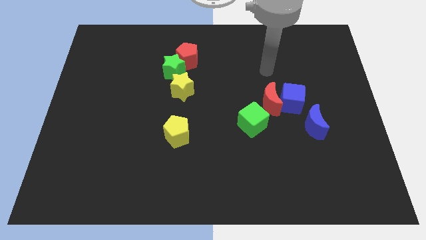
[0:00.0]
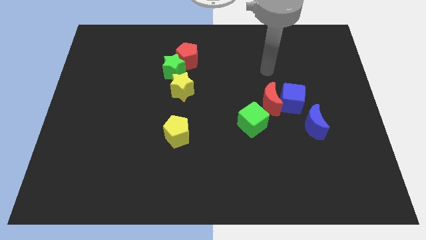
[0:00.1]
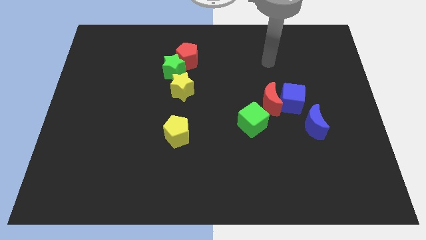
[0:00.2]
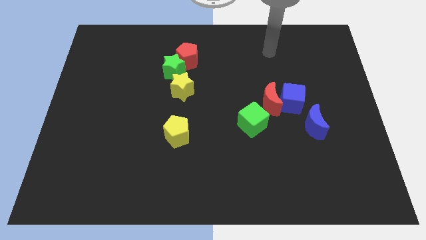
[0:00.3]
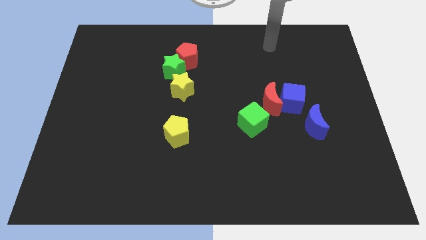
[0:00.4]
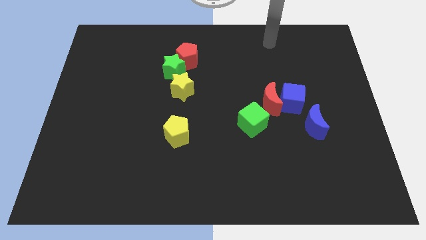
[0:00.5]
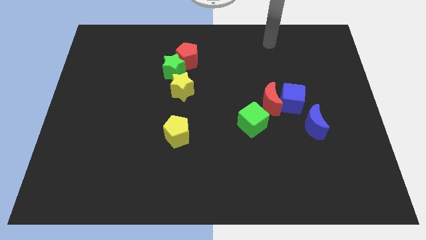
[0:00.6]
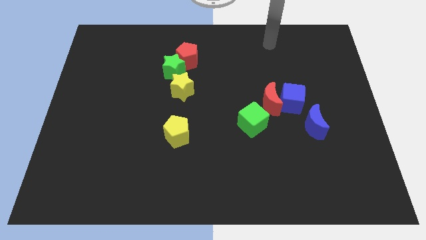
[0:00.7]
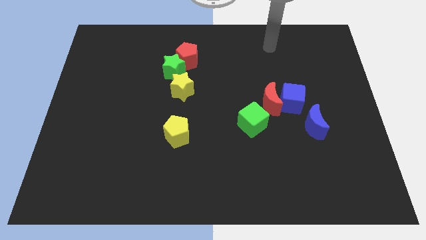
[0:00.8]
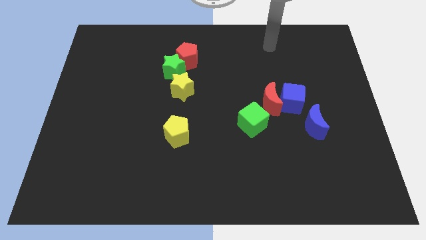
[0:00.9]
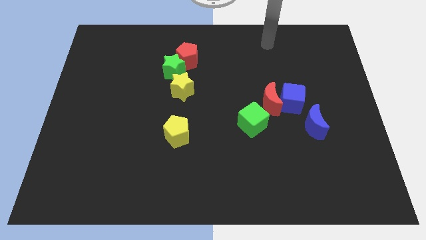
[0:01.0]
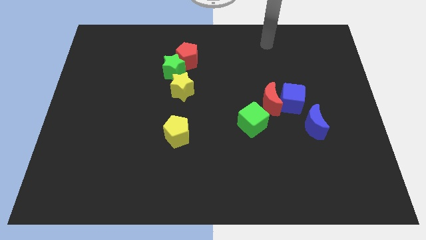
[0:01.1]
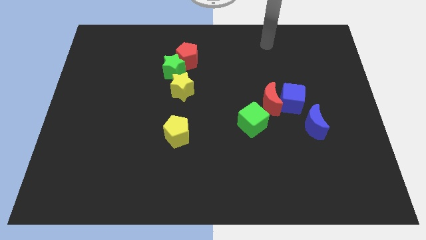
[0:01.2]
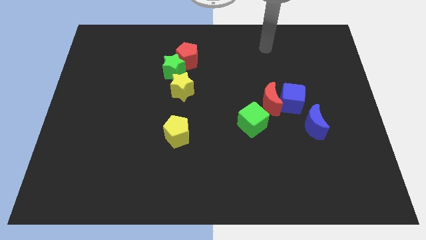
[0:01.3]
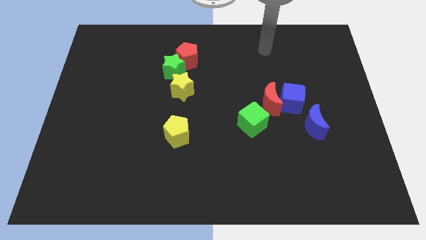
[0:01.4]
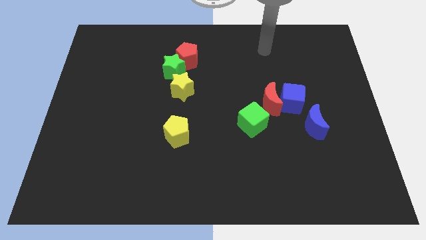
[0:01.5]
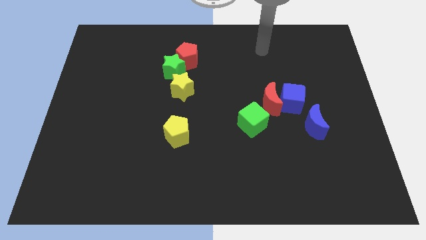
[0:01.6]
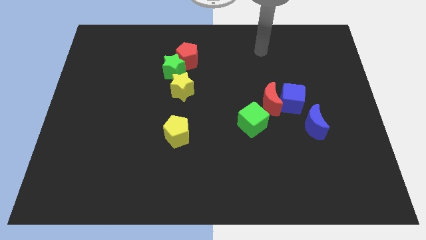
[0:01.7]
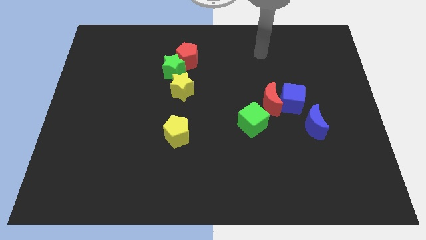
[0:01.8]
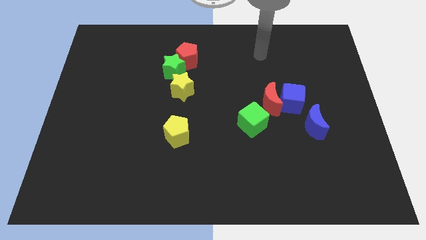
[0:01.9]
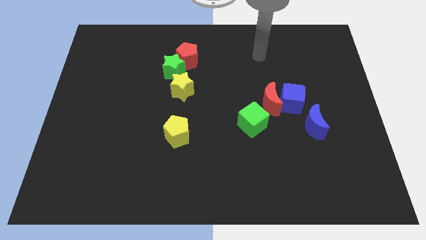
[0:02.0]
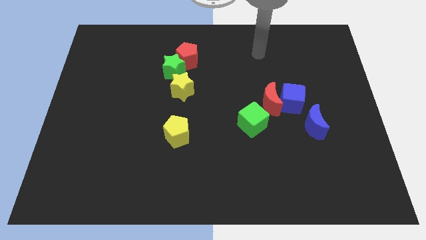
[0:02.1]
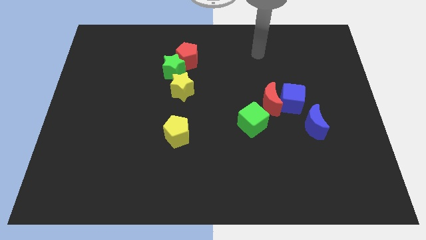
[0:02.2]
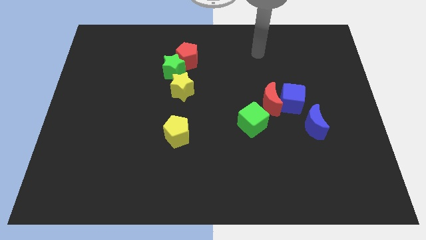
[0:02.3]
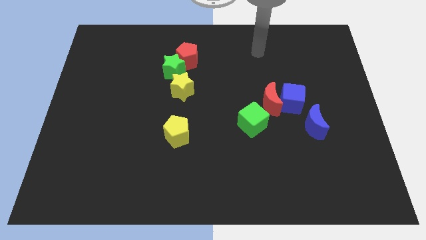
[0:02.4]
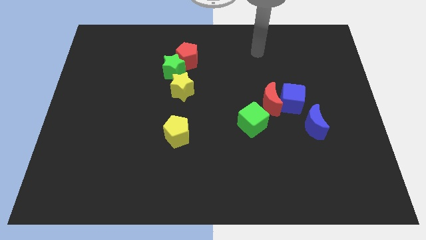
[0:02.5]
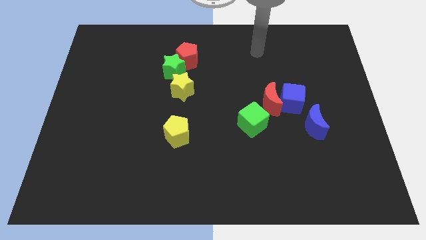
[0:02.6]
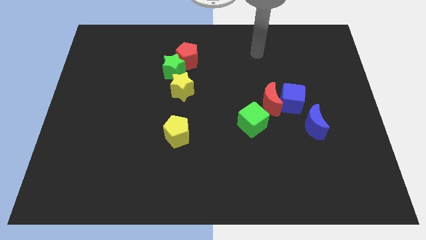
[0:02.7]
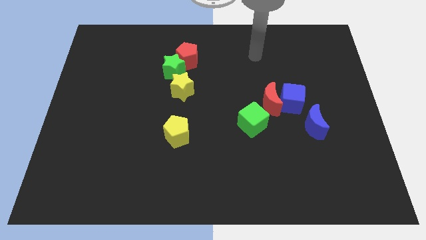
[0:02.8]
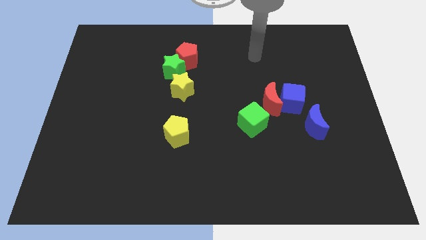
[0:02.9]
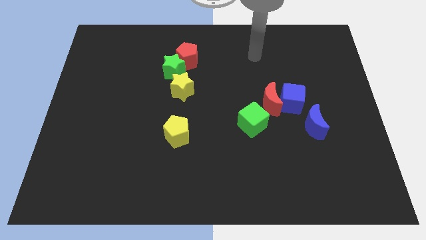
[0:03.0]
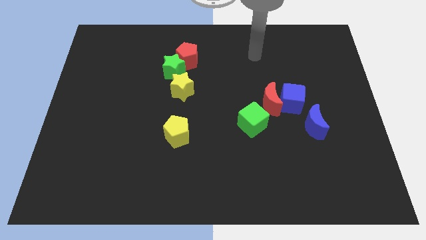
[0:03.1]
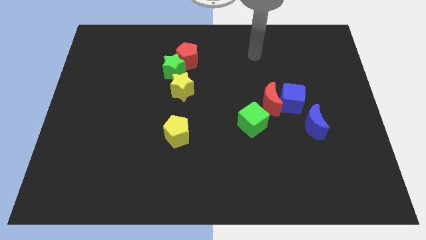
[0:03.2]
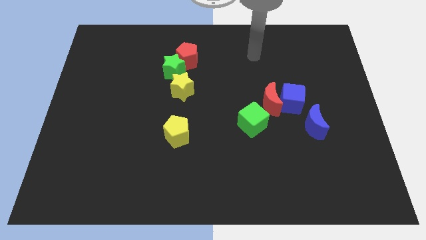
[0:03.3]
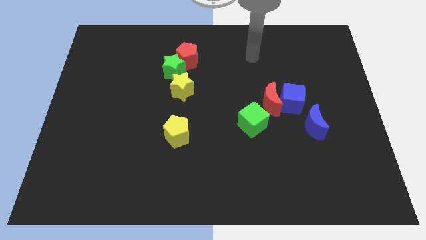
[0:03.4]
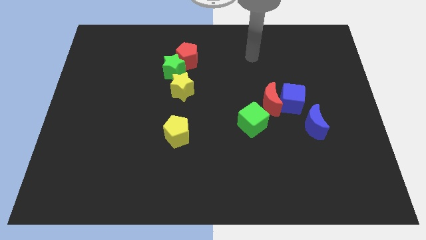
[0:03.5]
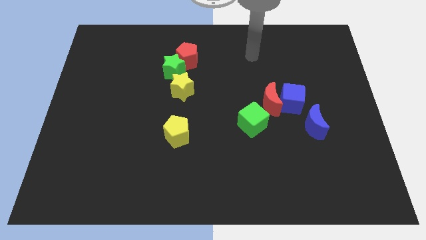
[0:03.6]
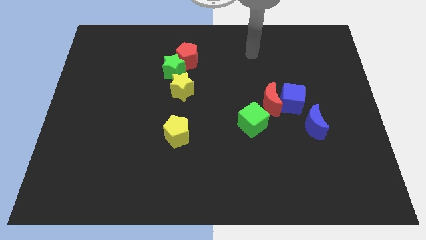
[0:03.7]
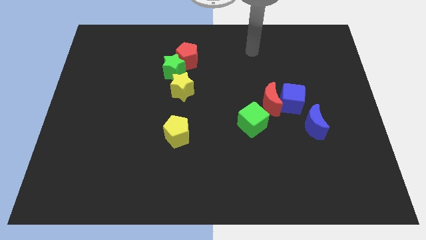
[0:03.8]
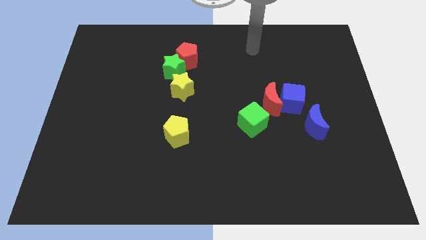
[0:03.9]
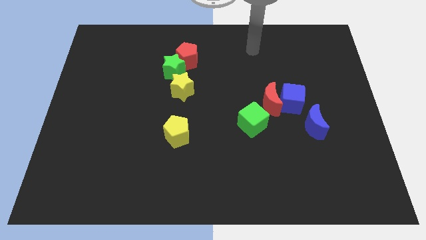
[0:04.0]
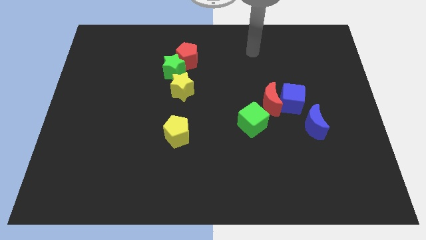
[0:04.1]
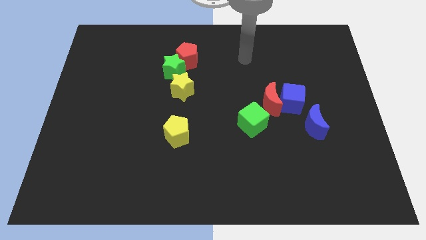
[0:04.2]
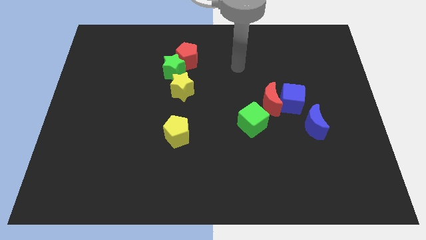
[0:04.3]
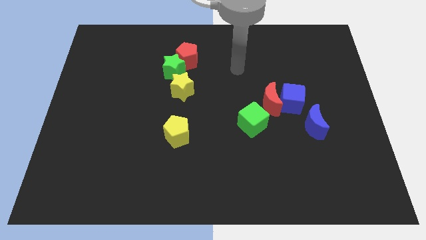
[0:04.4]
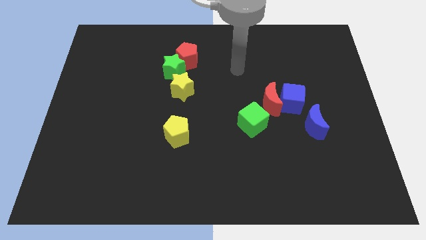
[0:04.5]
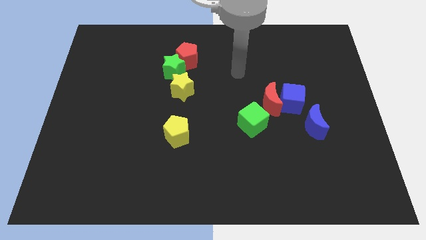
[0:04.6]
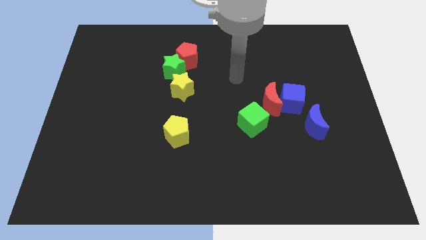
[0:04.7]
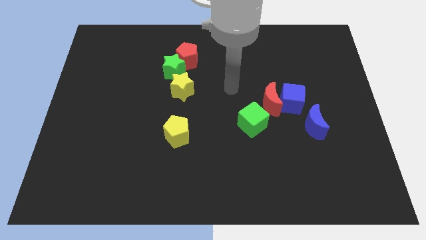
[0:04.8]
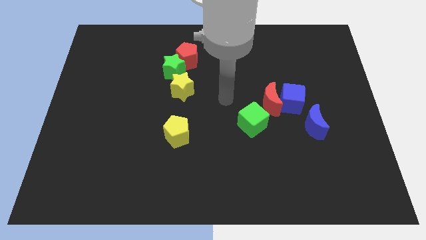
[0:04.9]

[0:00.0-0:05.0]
place your arm at the center of the board

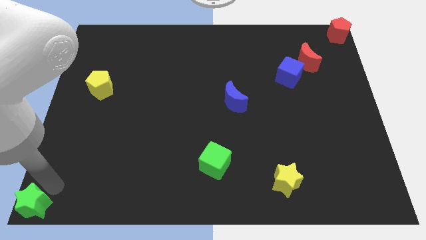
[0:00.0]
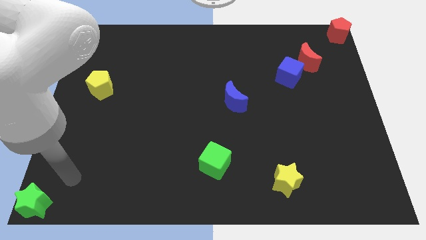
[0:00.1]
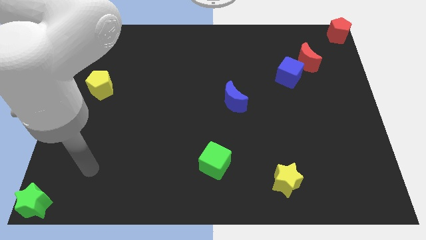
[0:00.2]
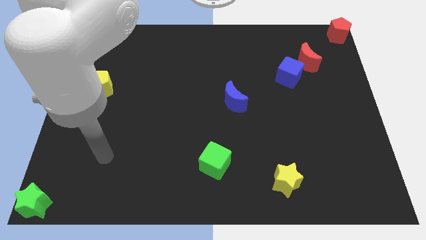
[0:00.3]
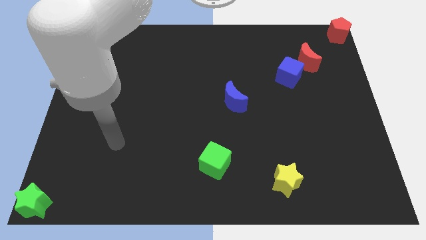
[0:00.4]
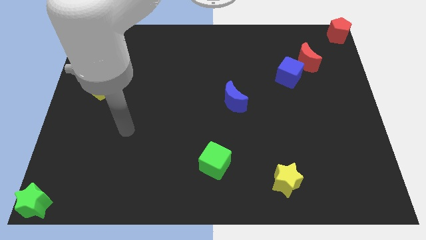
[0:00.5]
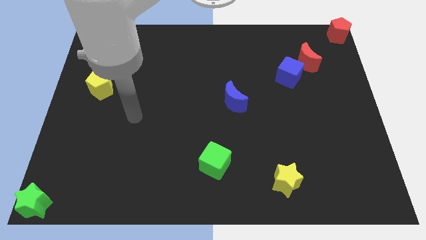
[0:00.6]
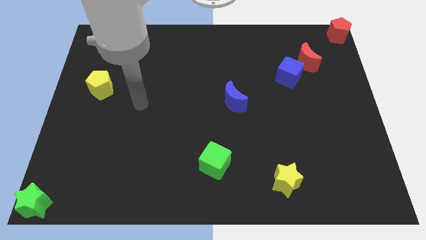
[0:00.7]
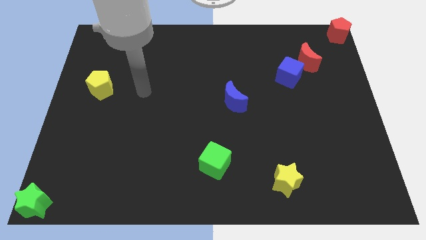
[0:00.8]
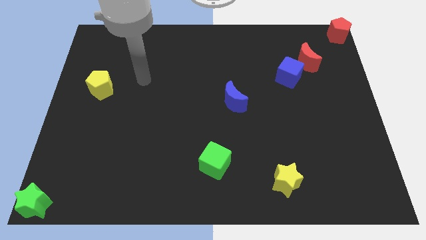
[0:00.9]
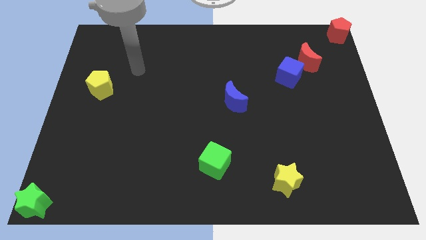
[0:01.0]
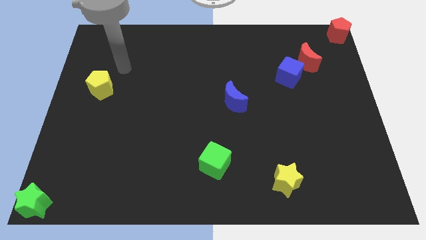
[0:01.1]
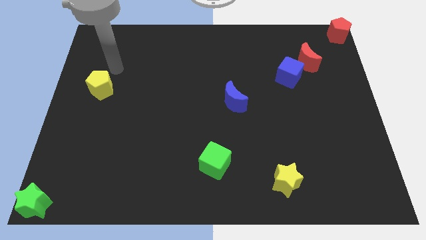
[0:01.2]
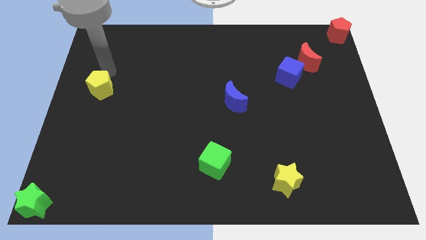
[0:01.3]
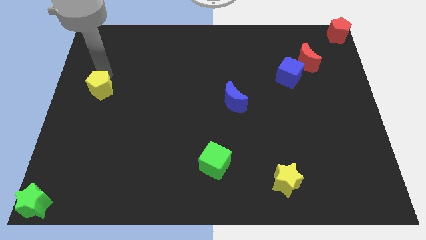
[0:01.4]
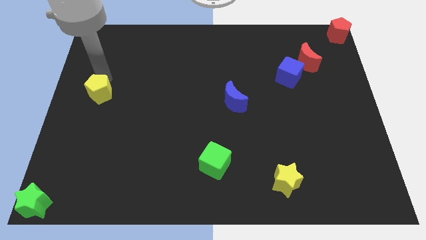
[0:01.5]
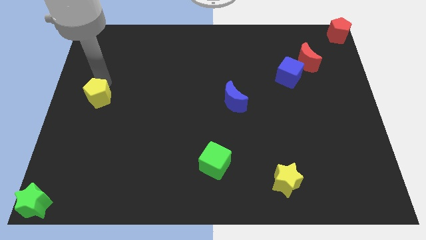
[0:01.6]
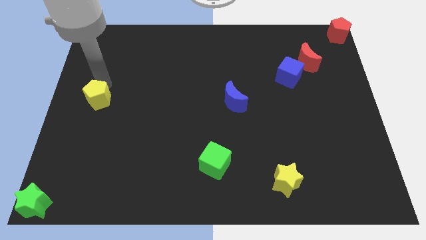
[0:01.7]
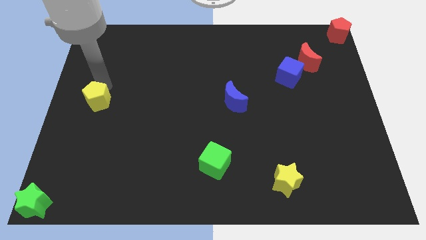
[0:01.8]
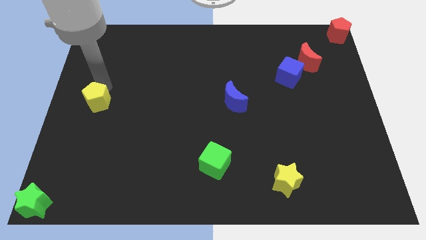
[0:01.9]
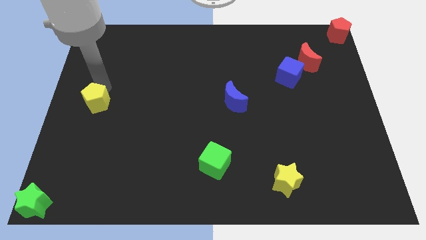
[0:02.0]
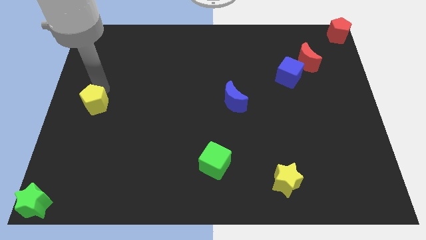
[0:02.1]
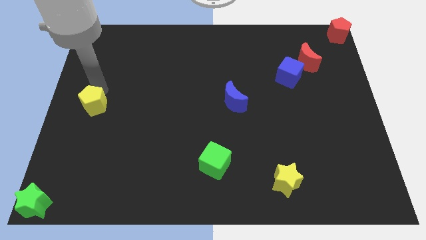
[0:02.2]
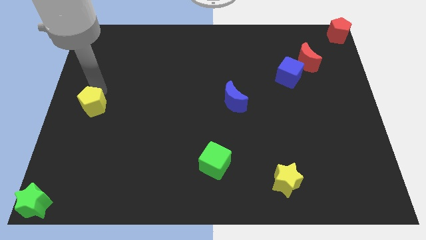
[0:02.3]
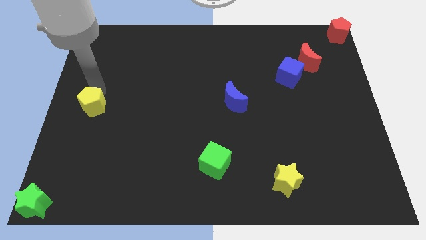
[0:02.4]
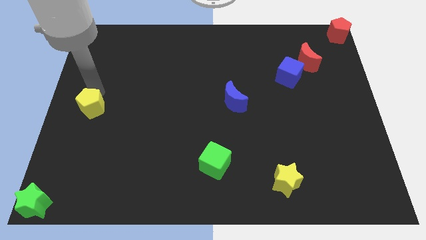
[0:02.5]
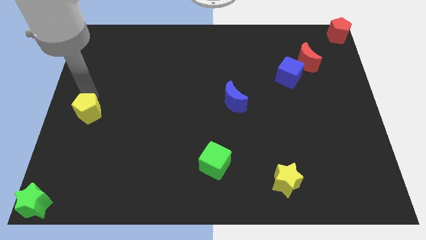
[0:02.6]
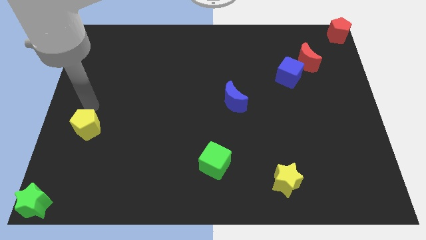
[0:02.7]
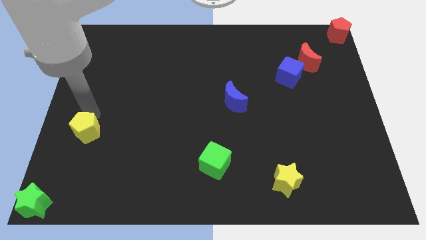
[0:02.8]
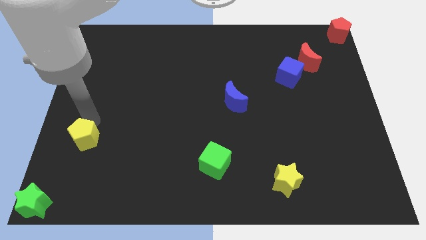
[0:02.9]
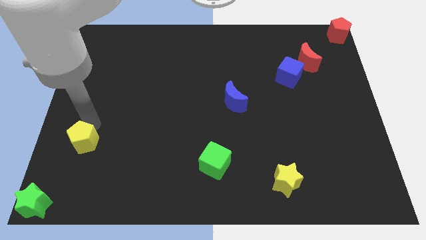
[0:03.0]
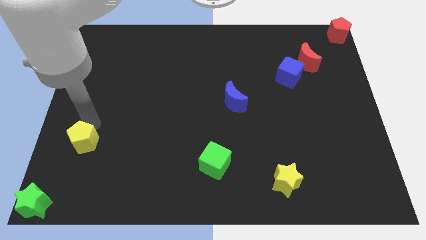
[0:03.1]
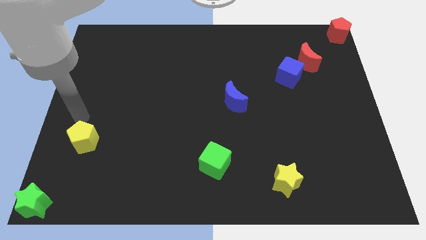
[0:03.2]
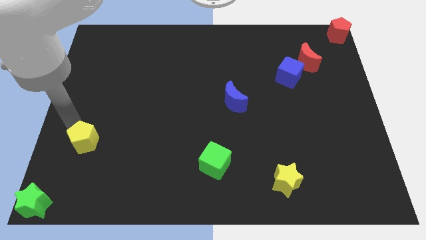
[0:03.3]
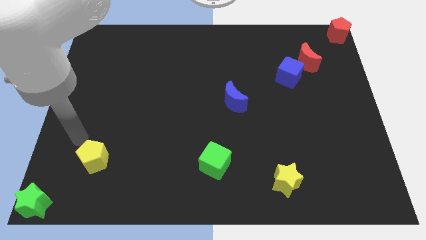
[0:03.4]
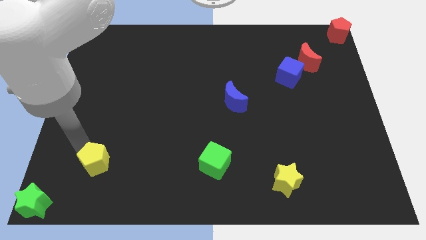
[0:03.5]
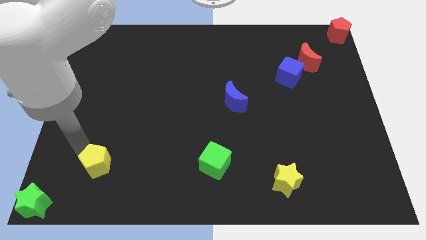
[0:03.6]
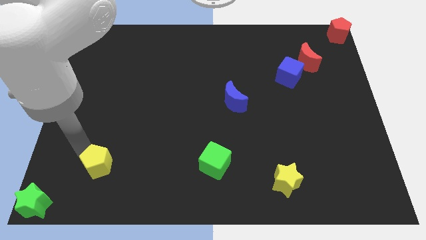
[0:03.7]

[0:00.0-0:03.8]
move the yellow pentagon to the left of the green cube

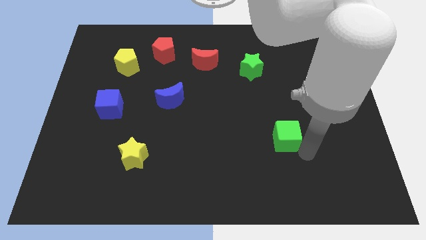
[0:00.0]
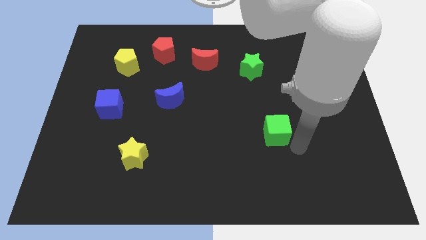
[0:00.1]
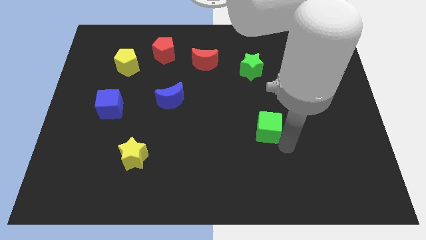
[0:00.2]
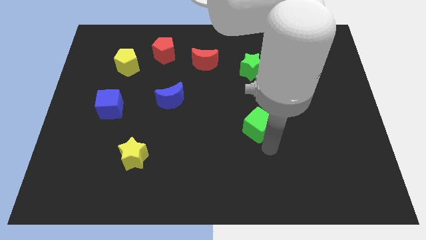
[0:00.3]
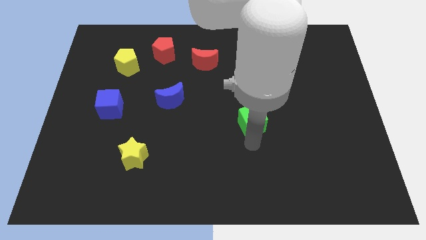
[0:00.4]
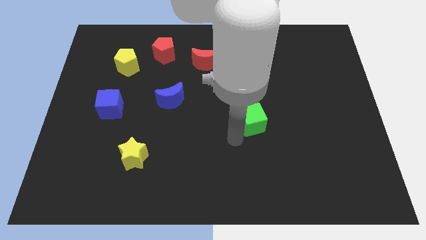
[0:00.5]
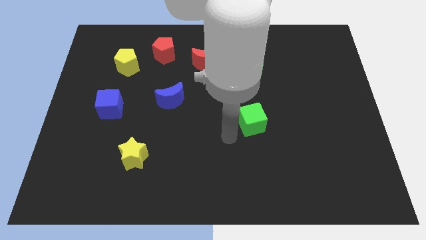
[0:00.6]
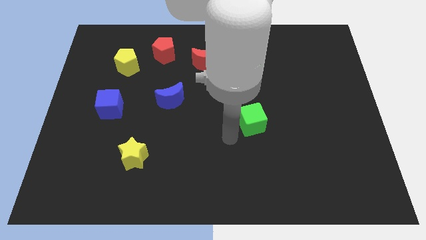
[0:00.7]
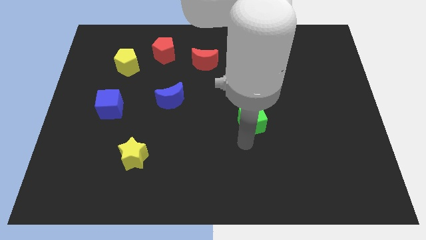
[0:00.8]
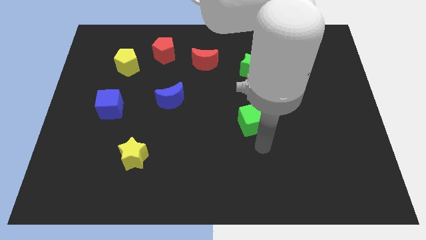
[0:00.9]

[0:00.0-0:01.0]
place the green cube underneath the green star
